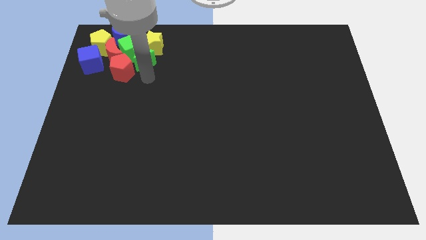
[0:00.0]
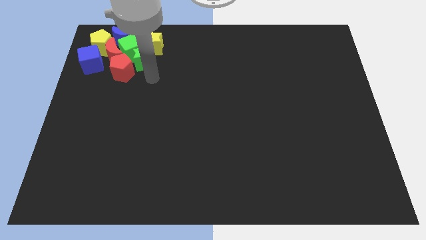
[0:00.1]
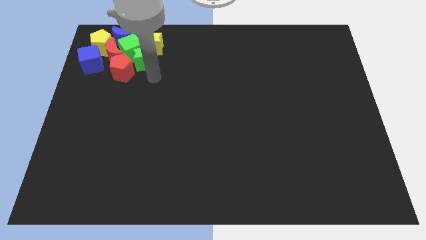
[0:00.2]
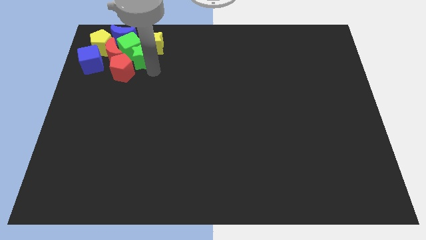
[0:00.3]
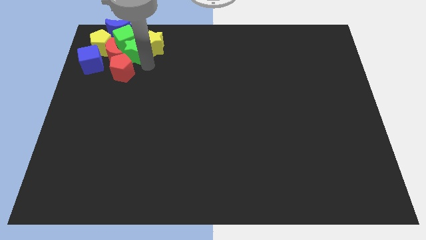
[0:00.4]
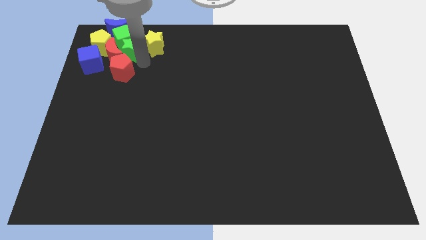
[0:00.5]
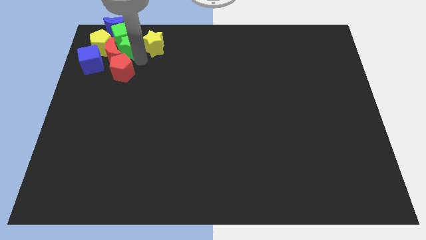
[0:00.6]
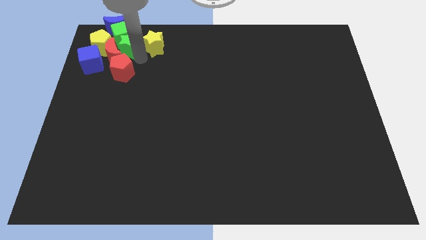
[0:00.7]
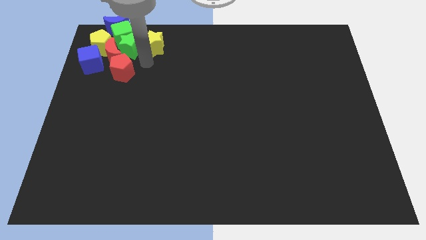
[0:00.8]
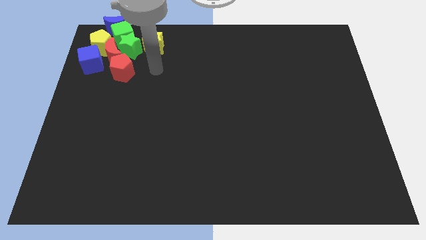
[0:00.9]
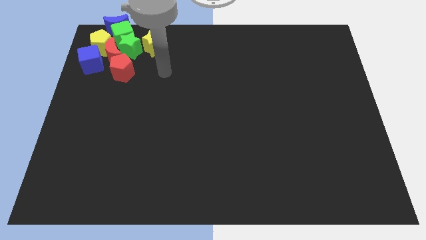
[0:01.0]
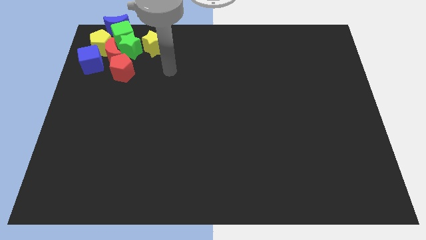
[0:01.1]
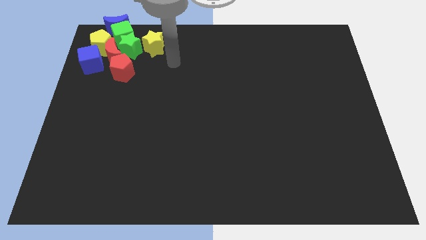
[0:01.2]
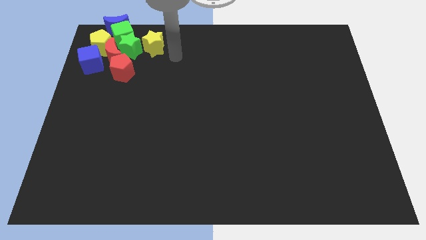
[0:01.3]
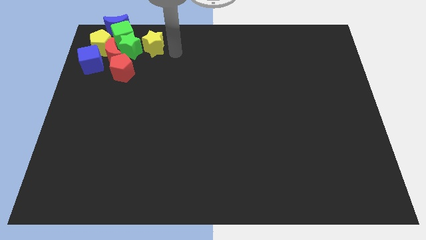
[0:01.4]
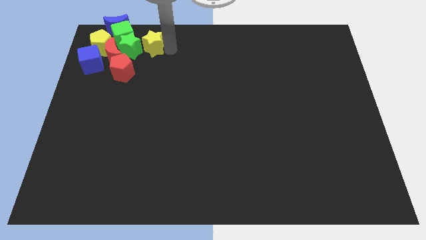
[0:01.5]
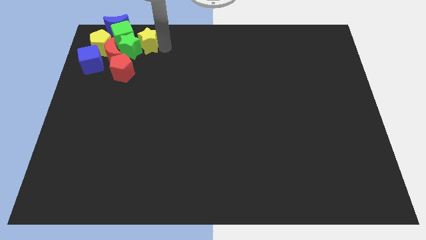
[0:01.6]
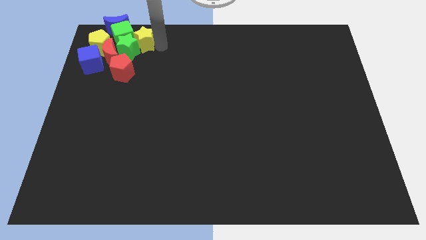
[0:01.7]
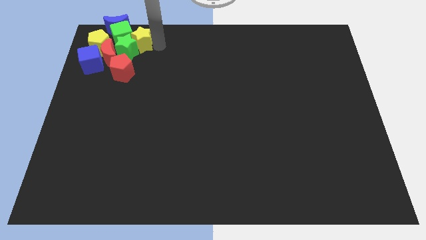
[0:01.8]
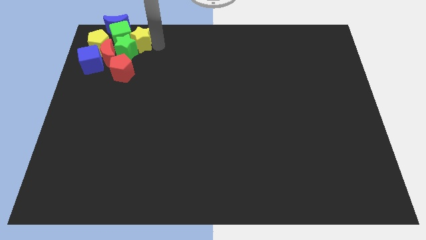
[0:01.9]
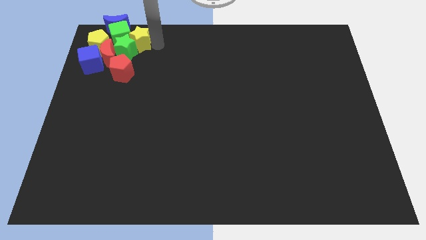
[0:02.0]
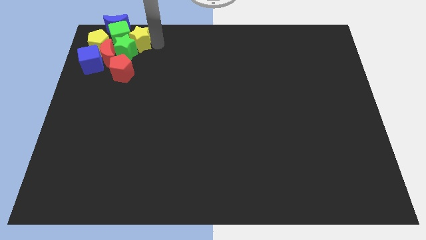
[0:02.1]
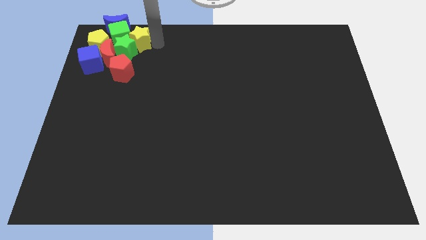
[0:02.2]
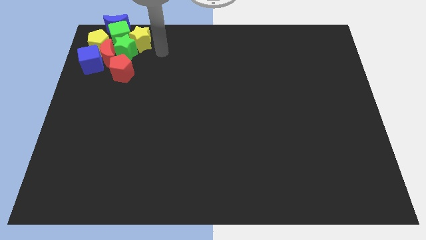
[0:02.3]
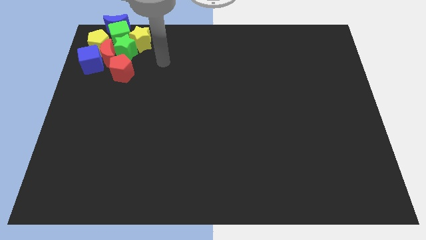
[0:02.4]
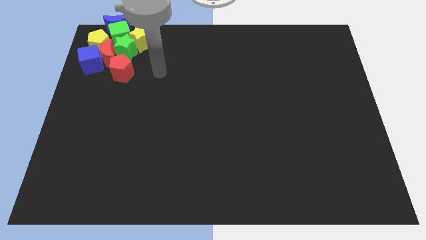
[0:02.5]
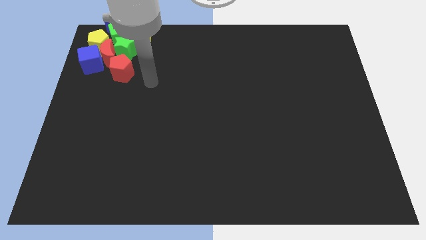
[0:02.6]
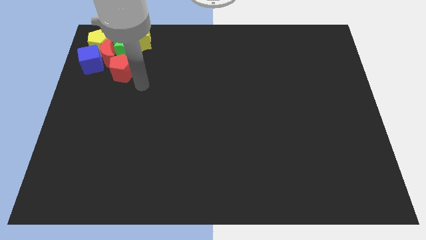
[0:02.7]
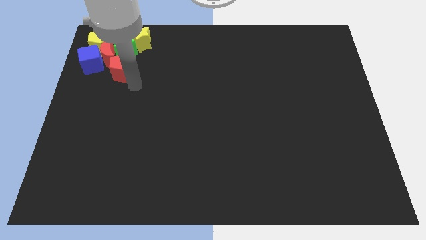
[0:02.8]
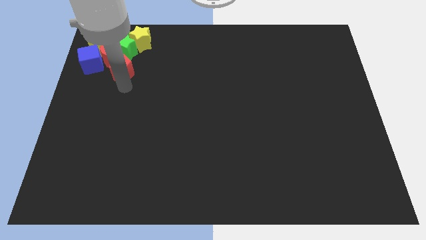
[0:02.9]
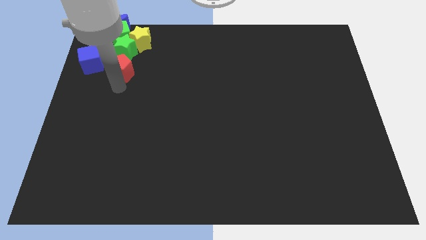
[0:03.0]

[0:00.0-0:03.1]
move the yellow star into the green blocks

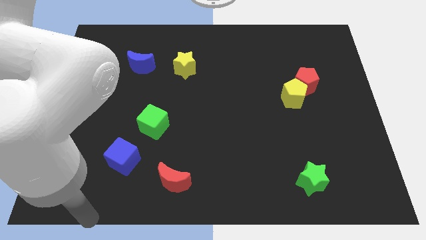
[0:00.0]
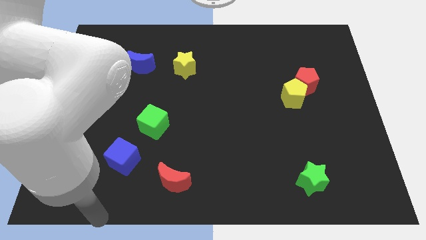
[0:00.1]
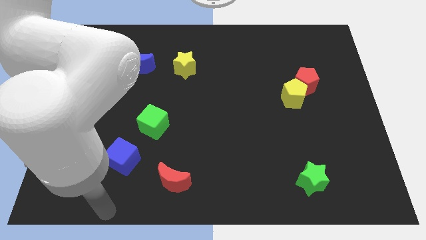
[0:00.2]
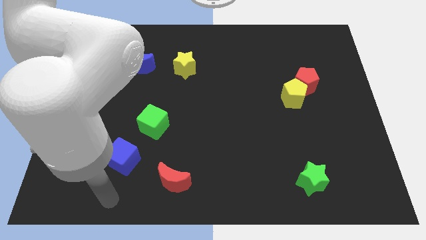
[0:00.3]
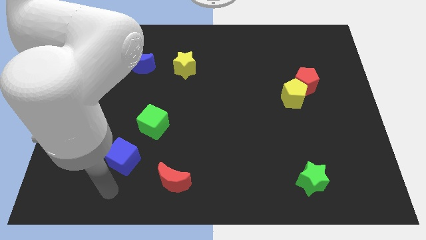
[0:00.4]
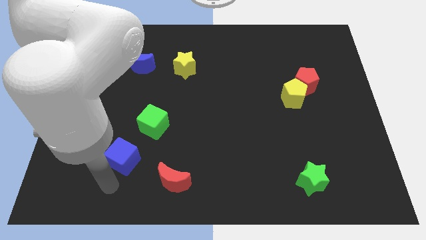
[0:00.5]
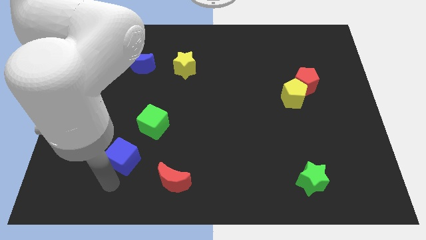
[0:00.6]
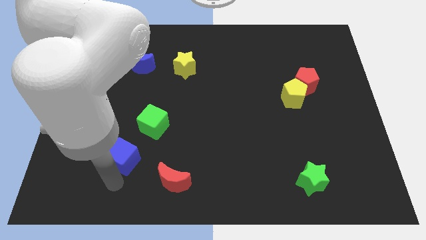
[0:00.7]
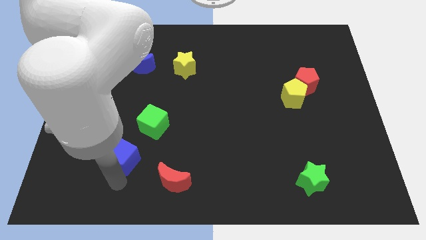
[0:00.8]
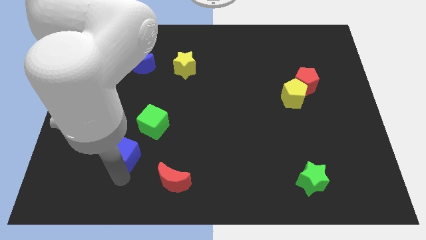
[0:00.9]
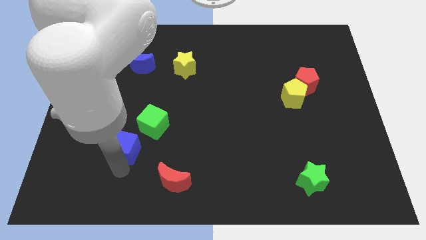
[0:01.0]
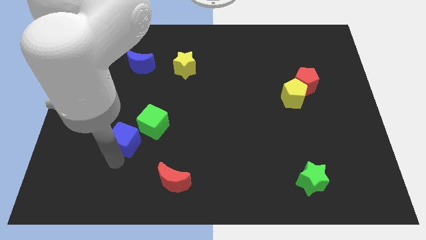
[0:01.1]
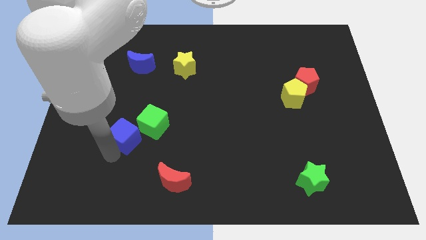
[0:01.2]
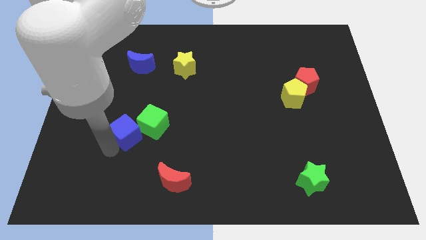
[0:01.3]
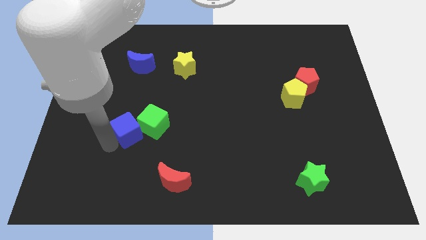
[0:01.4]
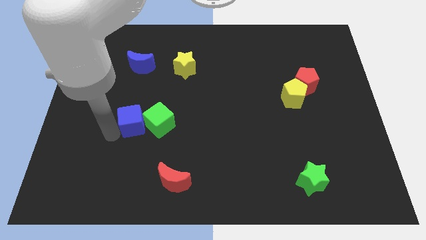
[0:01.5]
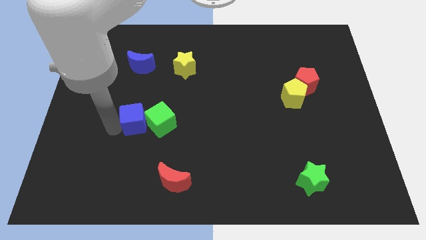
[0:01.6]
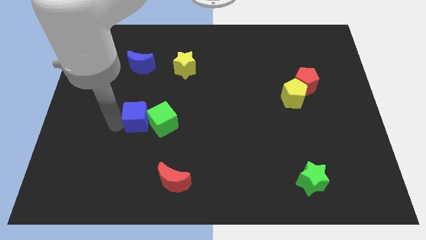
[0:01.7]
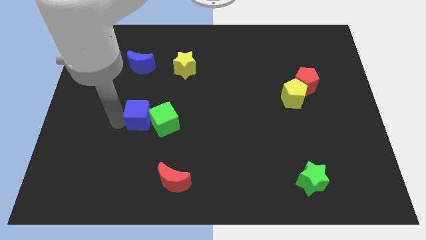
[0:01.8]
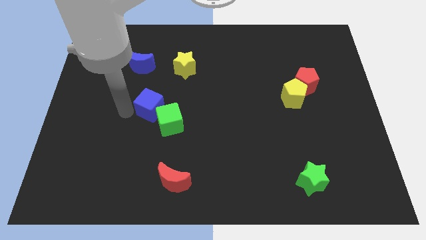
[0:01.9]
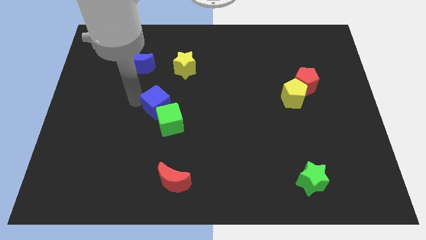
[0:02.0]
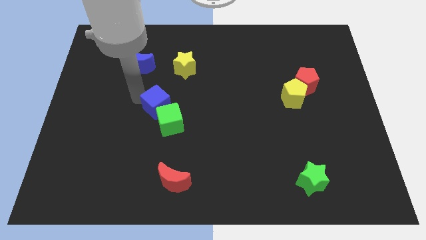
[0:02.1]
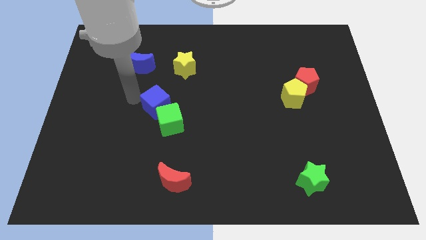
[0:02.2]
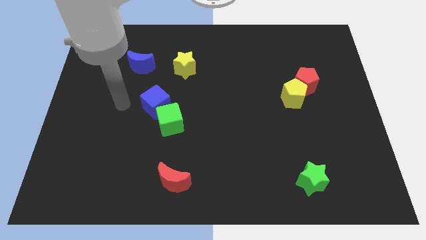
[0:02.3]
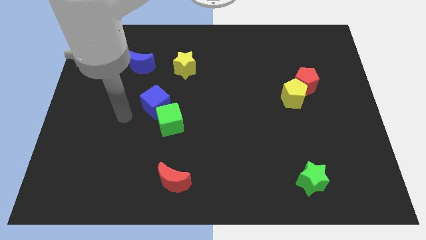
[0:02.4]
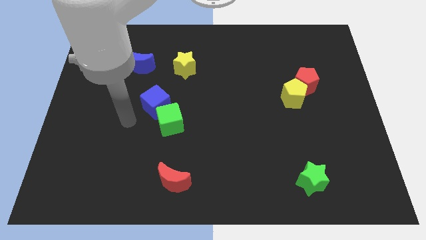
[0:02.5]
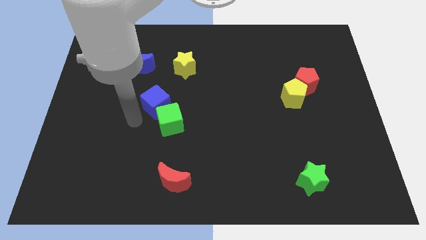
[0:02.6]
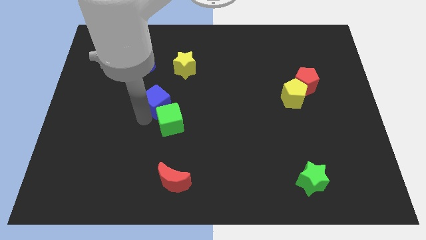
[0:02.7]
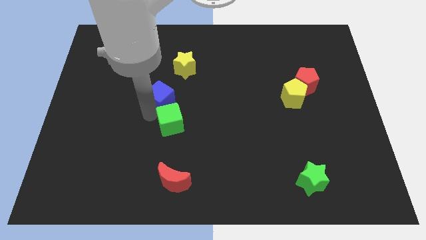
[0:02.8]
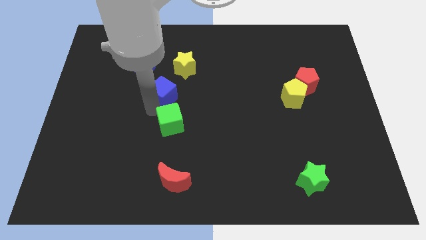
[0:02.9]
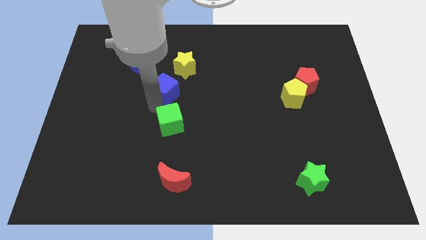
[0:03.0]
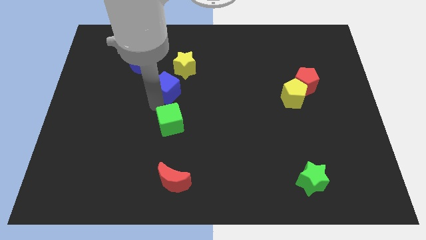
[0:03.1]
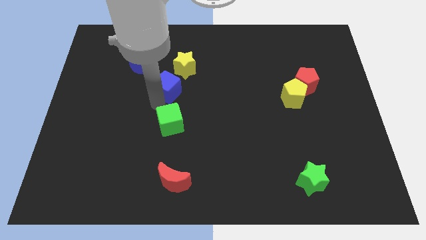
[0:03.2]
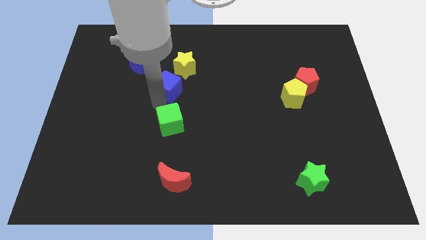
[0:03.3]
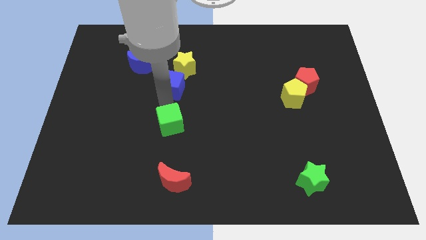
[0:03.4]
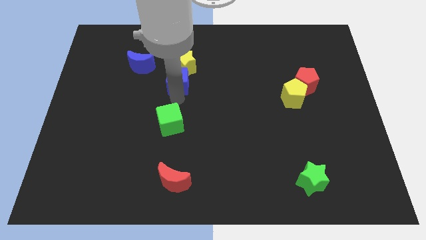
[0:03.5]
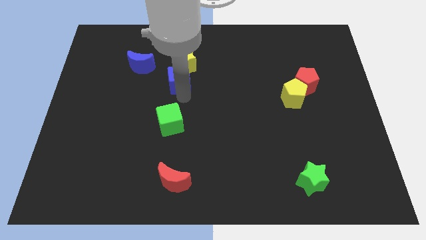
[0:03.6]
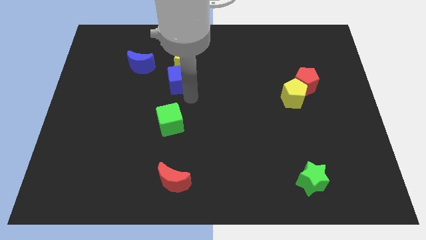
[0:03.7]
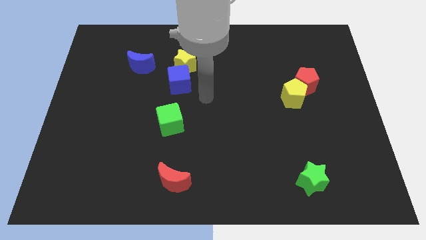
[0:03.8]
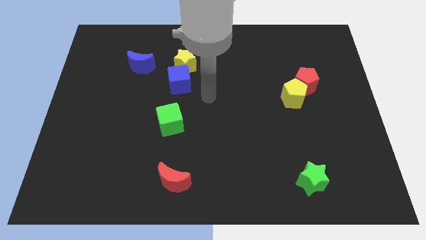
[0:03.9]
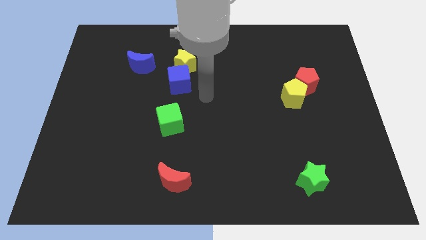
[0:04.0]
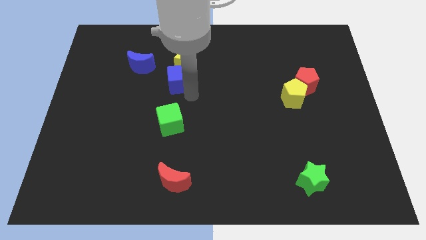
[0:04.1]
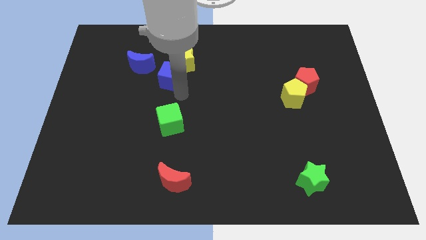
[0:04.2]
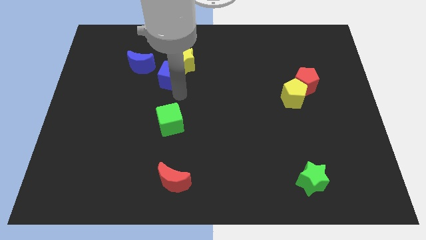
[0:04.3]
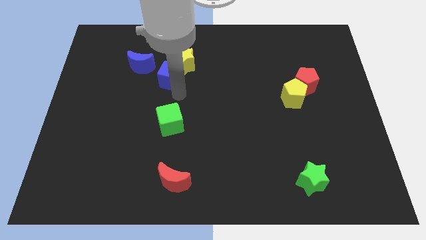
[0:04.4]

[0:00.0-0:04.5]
push the blue cube to bottom of yellow star

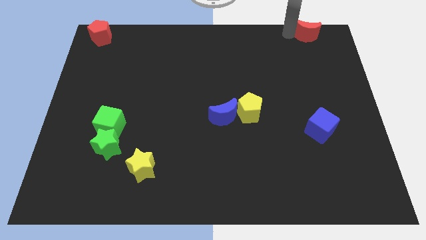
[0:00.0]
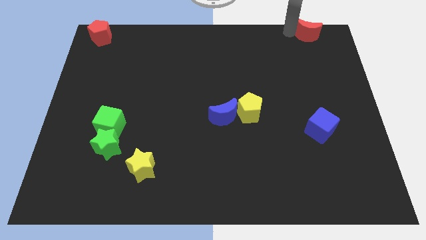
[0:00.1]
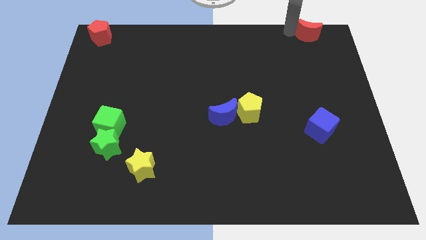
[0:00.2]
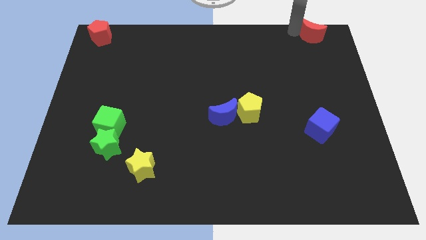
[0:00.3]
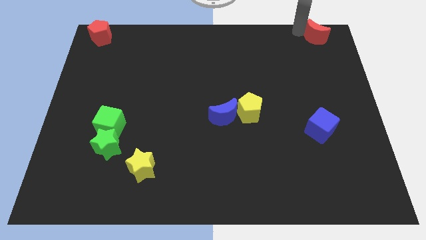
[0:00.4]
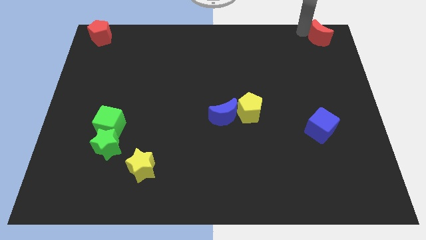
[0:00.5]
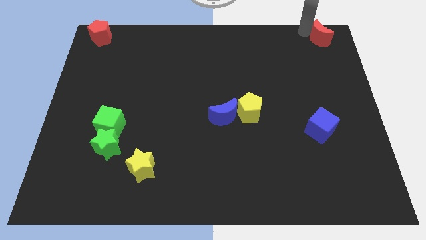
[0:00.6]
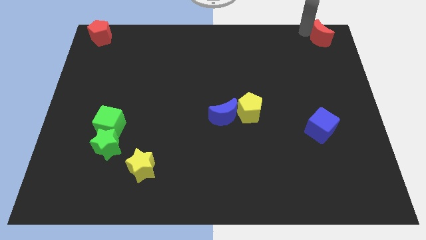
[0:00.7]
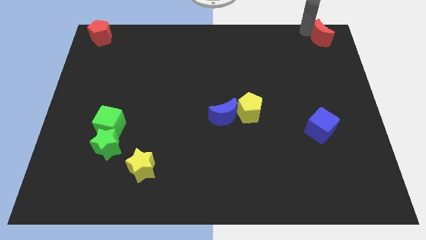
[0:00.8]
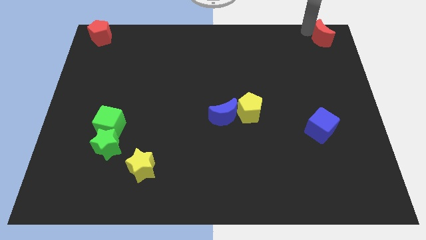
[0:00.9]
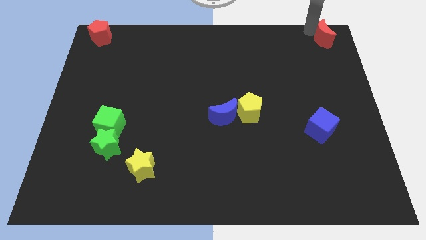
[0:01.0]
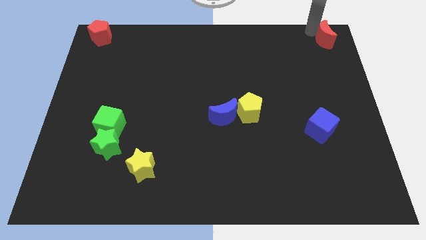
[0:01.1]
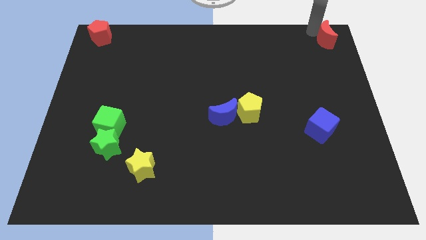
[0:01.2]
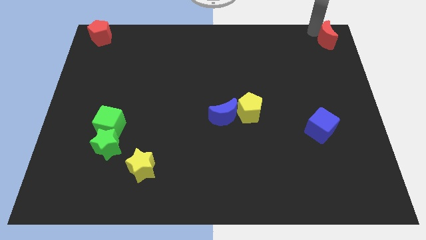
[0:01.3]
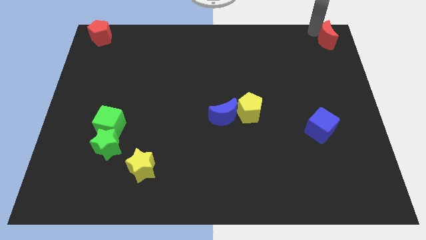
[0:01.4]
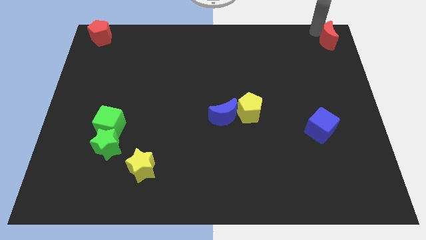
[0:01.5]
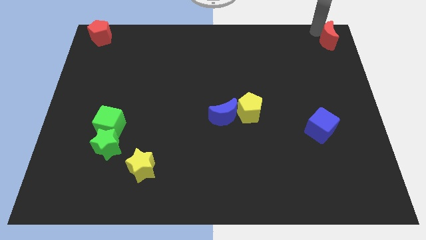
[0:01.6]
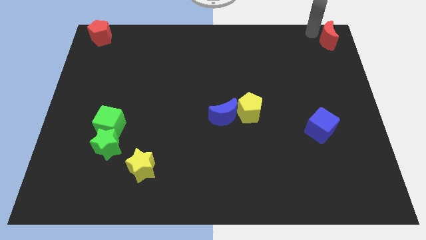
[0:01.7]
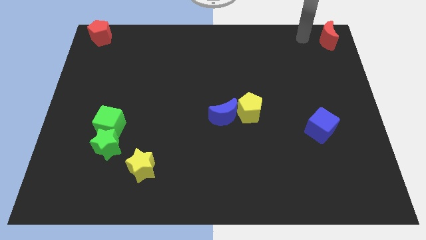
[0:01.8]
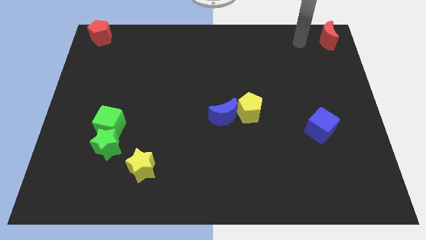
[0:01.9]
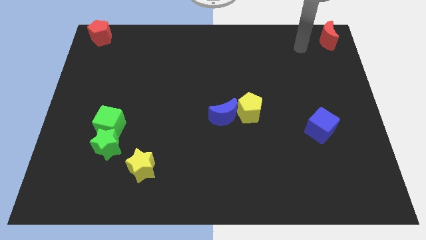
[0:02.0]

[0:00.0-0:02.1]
move the red crescent to the top right corner of the board
